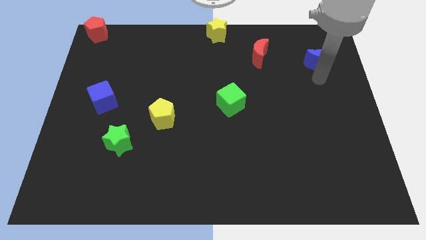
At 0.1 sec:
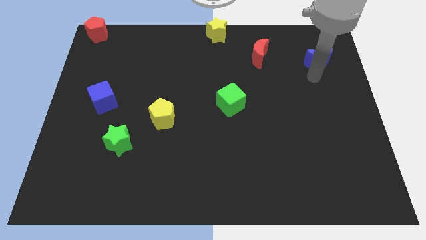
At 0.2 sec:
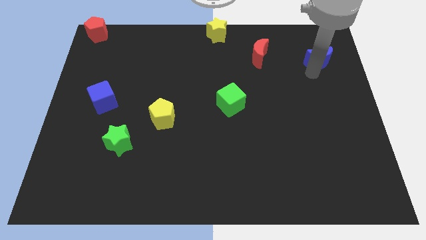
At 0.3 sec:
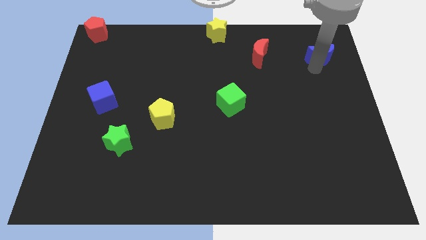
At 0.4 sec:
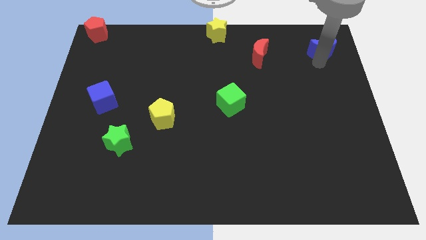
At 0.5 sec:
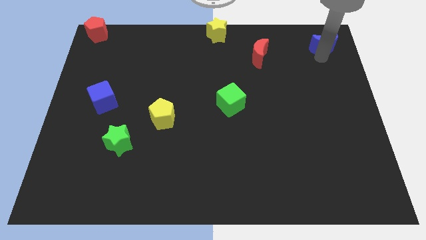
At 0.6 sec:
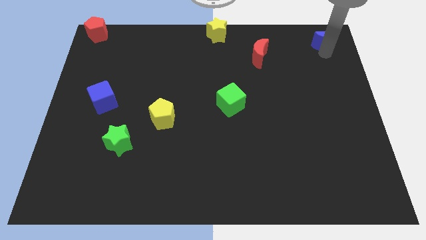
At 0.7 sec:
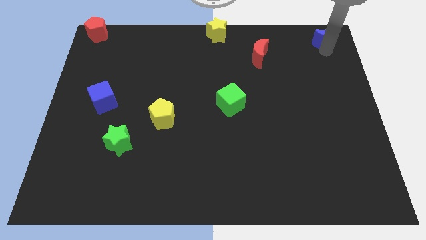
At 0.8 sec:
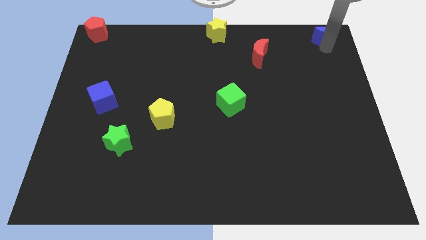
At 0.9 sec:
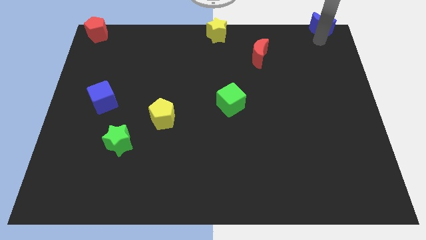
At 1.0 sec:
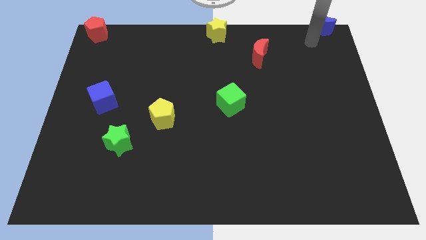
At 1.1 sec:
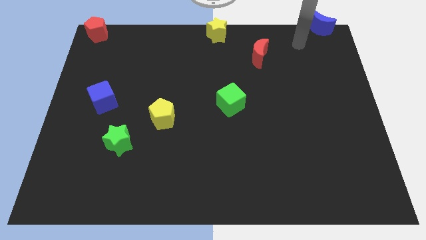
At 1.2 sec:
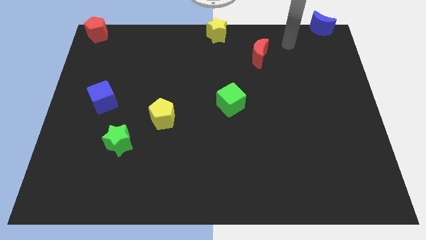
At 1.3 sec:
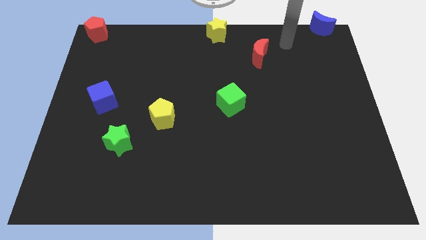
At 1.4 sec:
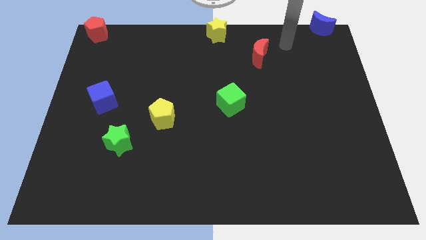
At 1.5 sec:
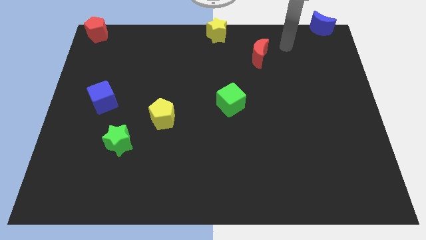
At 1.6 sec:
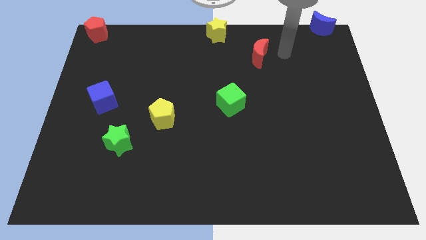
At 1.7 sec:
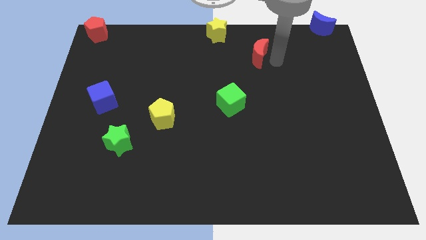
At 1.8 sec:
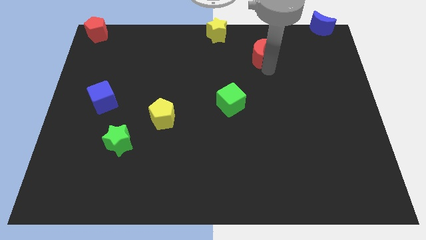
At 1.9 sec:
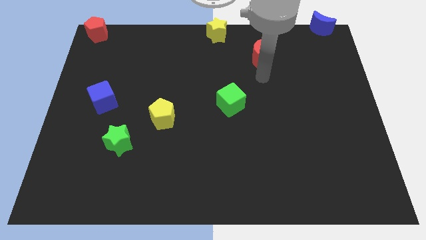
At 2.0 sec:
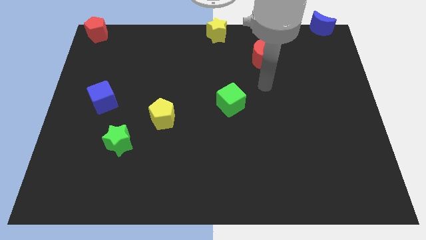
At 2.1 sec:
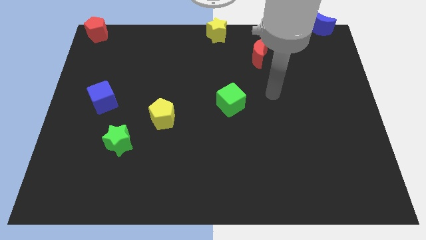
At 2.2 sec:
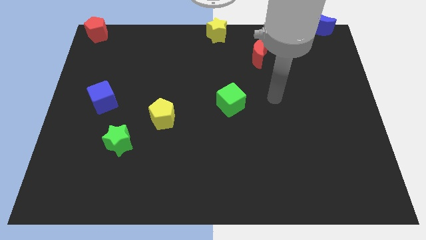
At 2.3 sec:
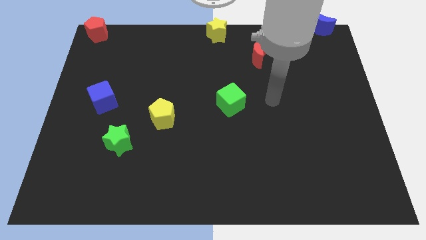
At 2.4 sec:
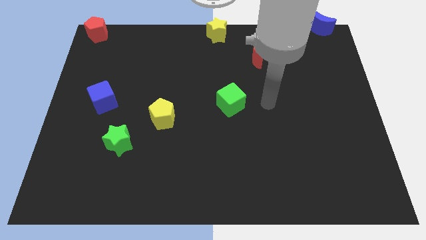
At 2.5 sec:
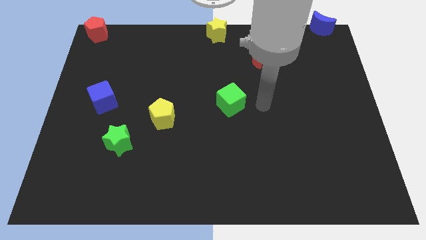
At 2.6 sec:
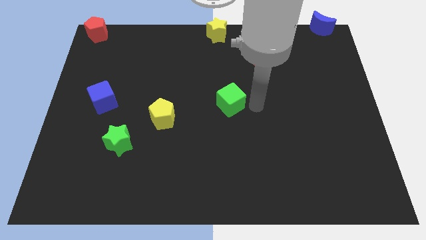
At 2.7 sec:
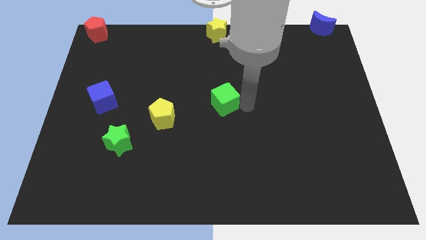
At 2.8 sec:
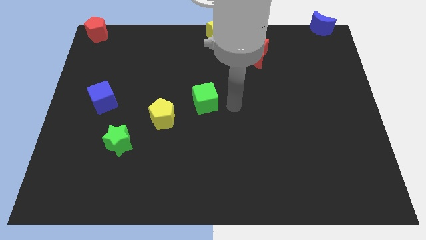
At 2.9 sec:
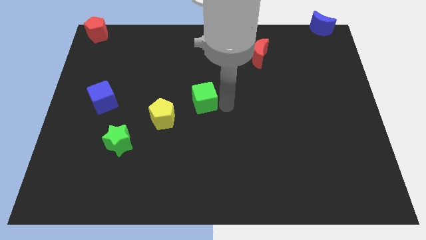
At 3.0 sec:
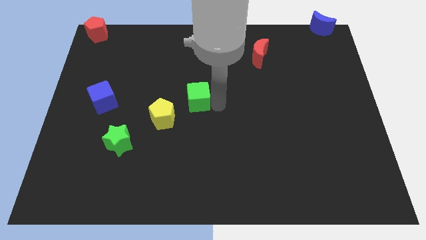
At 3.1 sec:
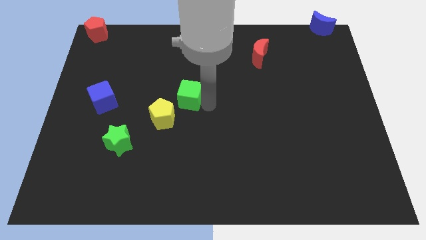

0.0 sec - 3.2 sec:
drag the blue semi circle to the top right side of the board

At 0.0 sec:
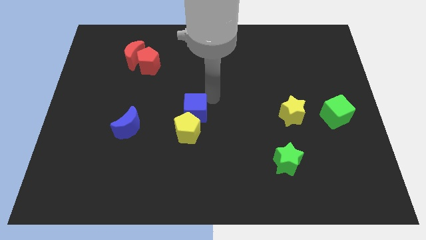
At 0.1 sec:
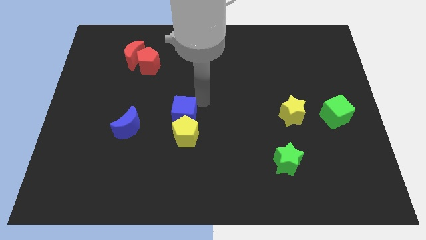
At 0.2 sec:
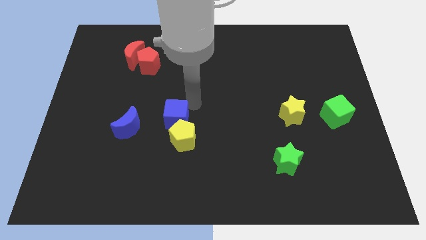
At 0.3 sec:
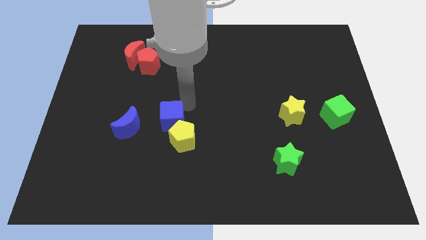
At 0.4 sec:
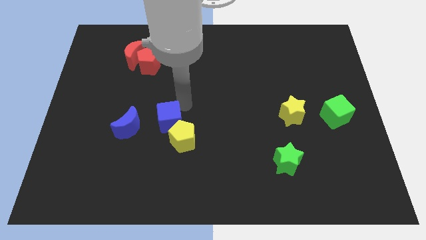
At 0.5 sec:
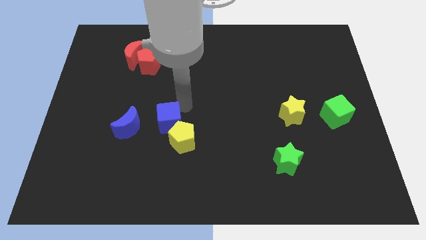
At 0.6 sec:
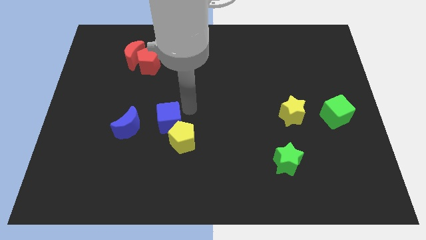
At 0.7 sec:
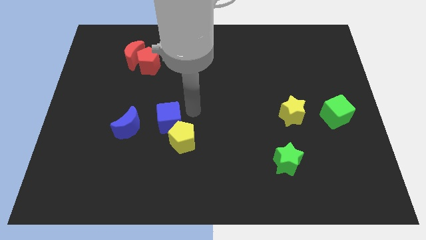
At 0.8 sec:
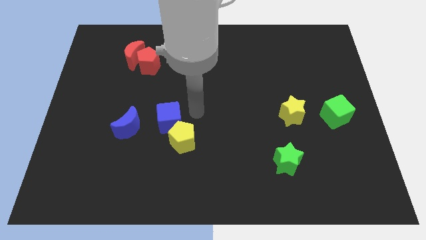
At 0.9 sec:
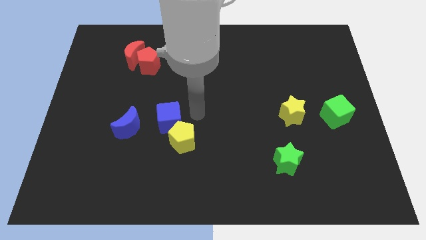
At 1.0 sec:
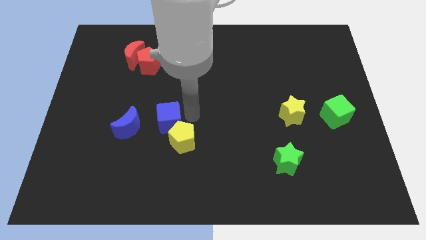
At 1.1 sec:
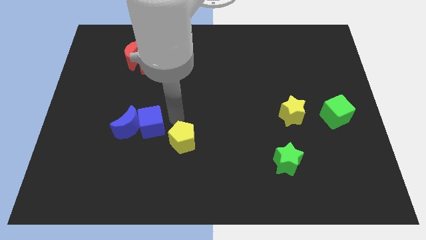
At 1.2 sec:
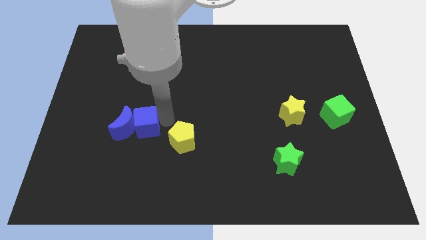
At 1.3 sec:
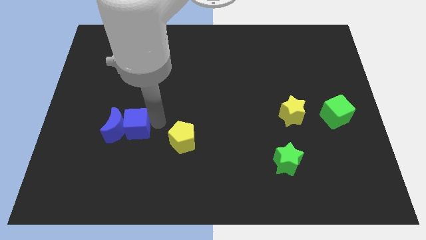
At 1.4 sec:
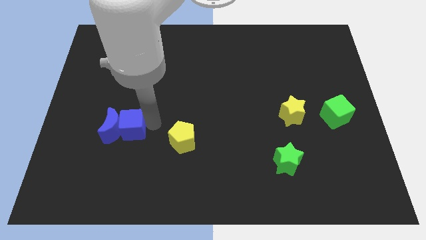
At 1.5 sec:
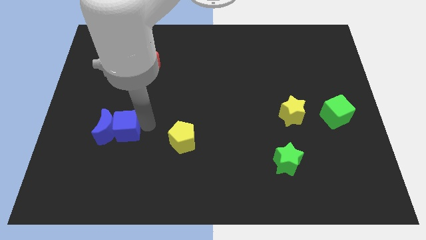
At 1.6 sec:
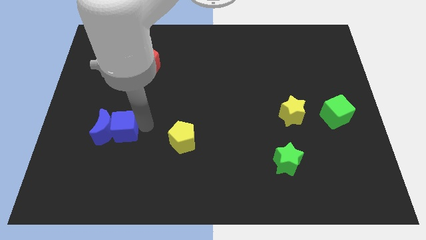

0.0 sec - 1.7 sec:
push the blue cube into the blue moon

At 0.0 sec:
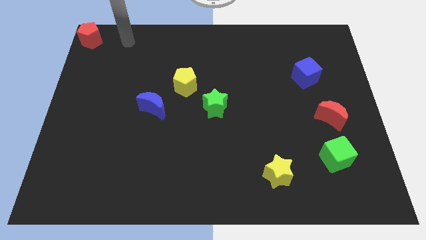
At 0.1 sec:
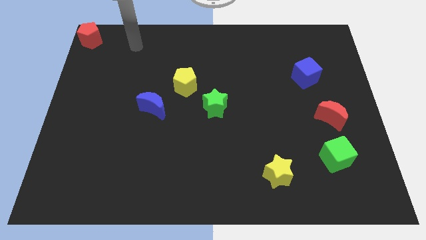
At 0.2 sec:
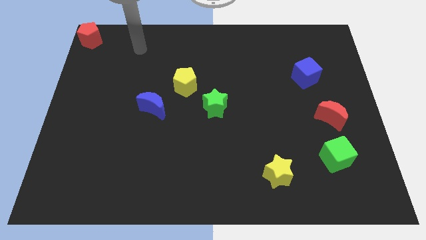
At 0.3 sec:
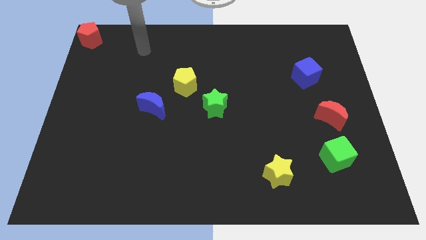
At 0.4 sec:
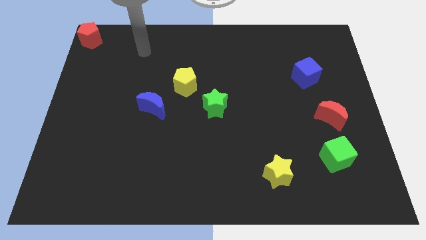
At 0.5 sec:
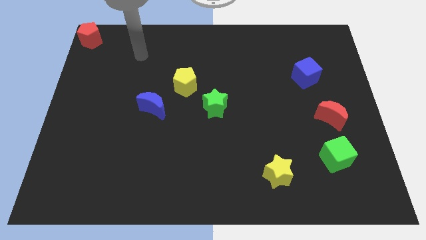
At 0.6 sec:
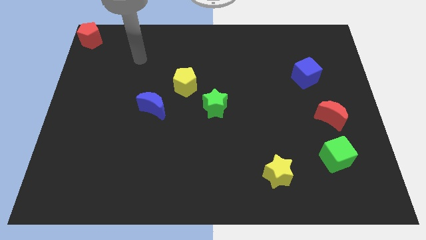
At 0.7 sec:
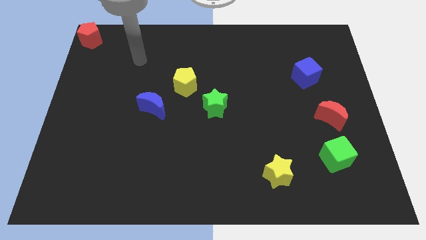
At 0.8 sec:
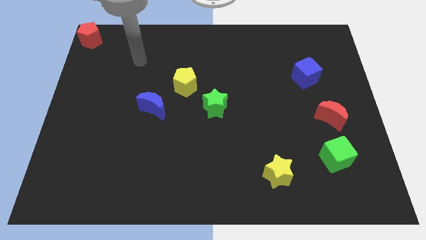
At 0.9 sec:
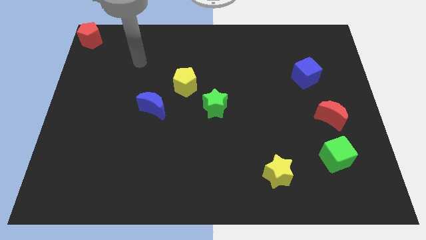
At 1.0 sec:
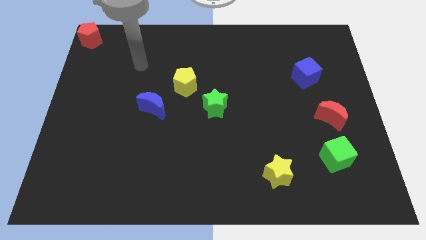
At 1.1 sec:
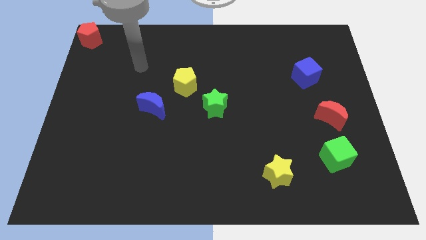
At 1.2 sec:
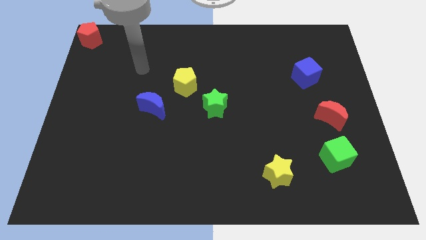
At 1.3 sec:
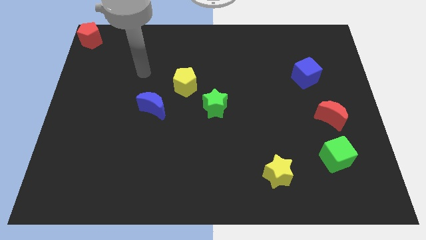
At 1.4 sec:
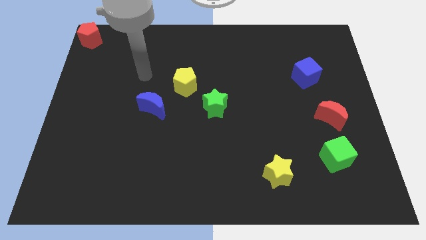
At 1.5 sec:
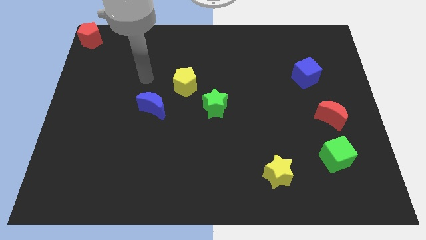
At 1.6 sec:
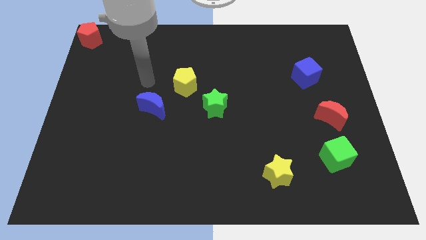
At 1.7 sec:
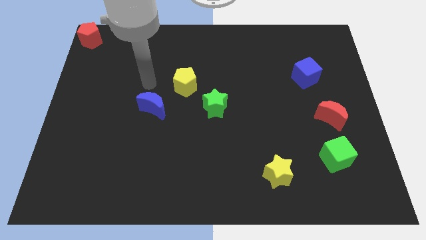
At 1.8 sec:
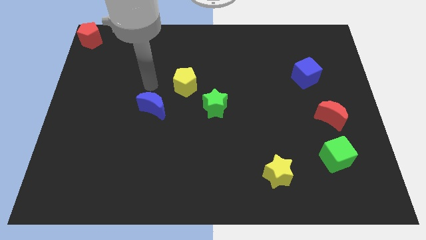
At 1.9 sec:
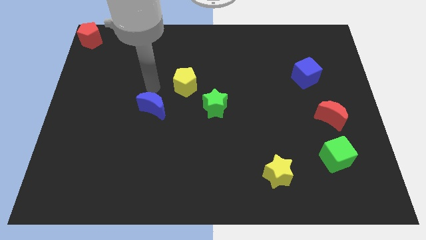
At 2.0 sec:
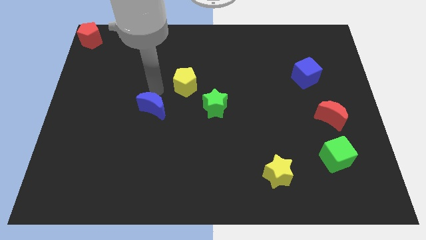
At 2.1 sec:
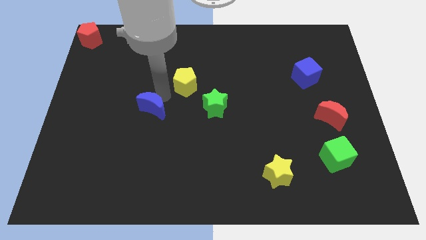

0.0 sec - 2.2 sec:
move your arm towards the blue crescent

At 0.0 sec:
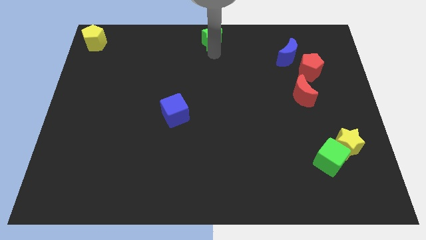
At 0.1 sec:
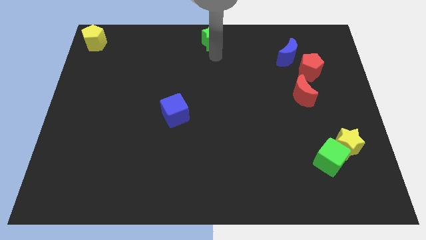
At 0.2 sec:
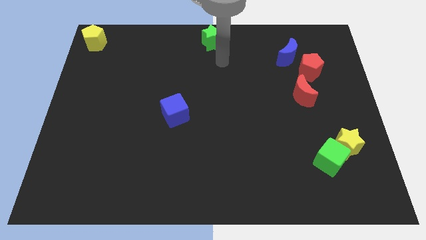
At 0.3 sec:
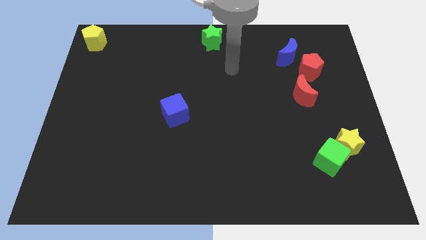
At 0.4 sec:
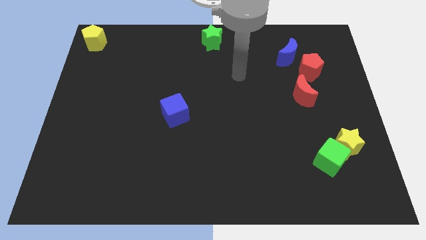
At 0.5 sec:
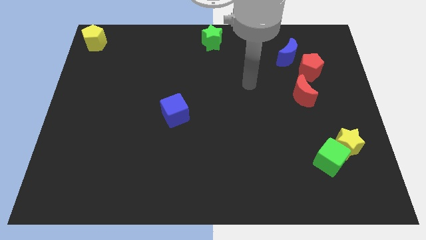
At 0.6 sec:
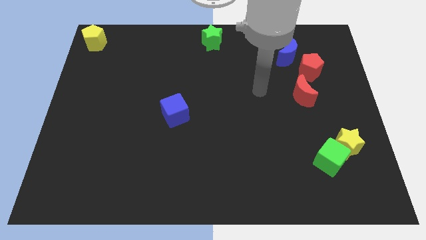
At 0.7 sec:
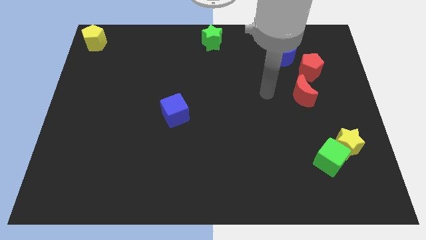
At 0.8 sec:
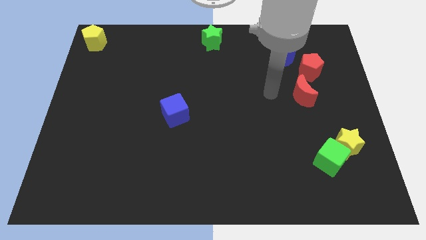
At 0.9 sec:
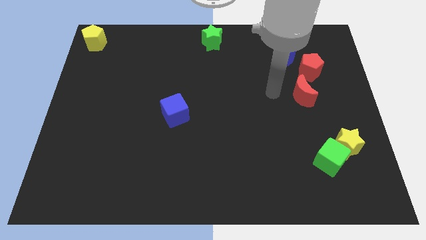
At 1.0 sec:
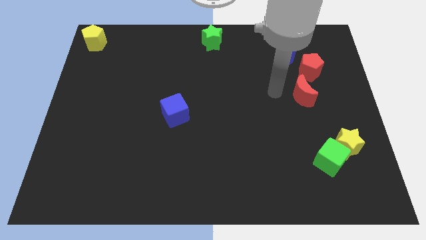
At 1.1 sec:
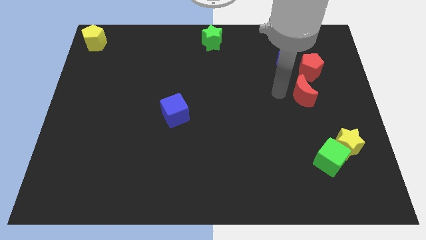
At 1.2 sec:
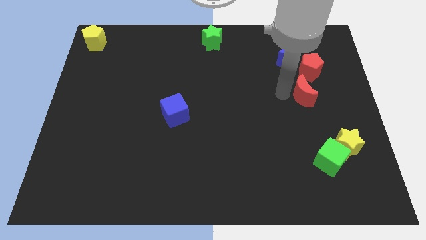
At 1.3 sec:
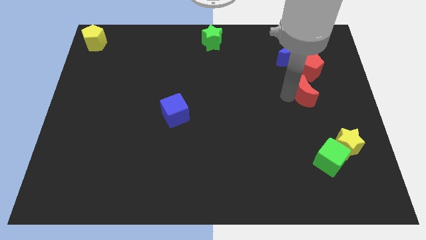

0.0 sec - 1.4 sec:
place your arm to the left of the red moon

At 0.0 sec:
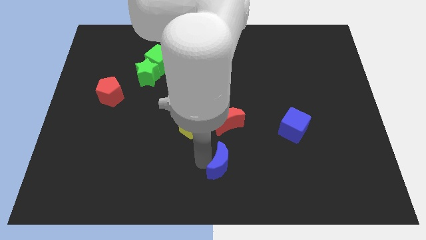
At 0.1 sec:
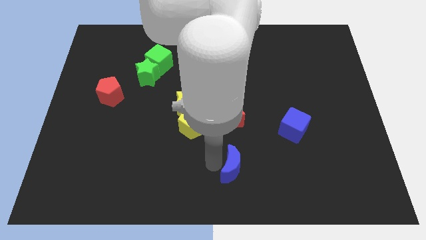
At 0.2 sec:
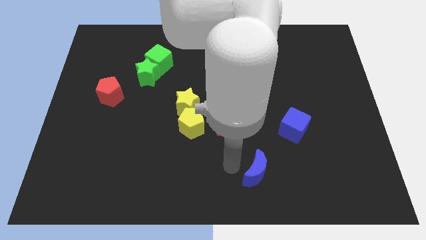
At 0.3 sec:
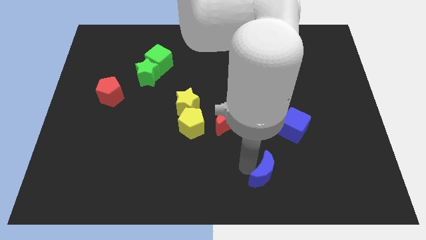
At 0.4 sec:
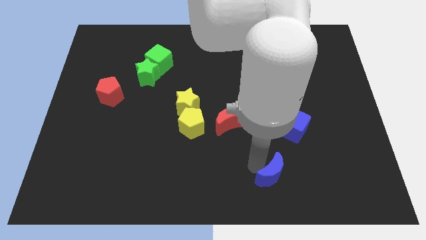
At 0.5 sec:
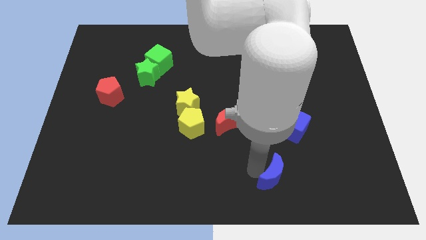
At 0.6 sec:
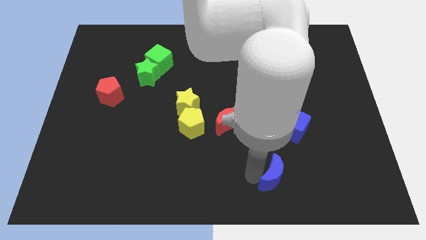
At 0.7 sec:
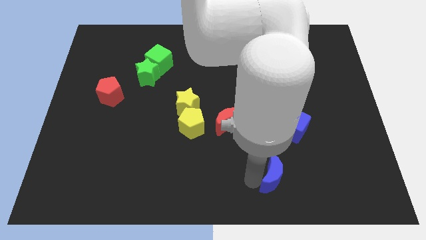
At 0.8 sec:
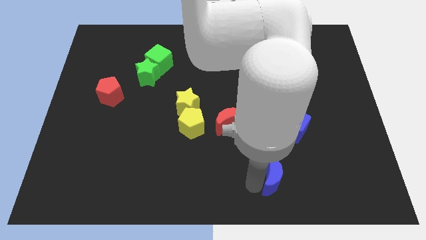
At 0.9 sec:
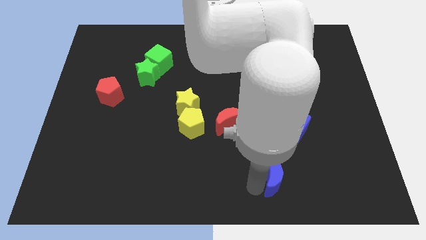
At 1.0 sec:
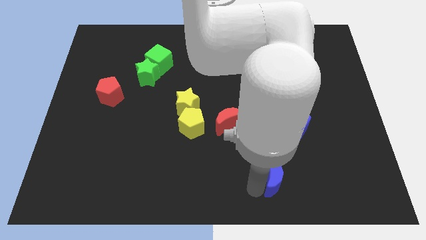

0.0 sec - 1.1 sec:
move the blue moon parallel to the bottom left of the blue cube
